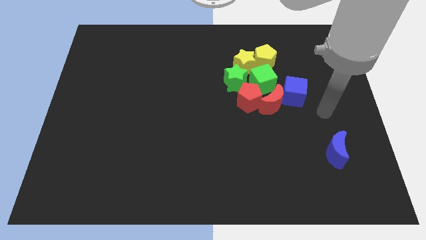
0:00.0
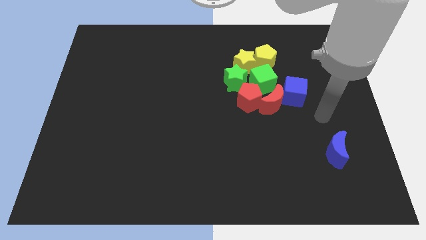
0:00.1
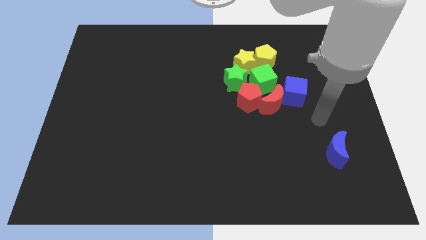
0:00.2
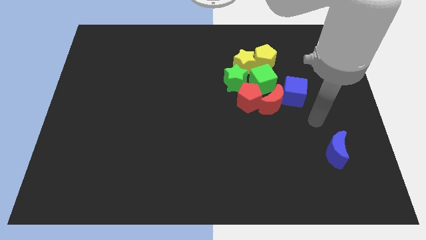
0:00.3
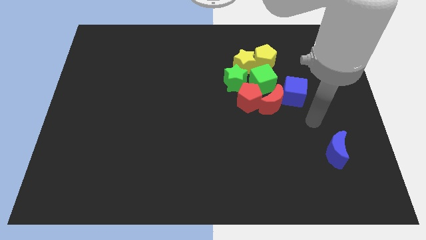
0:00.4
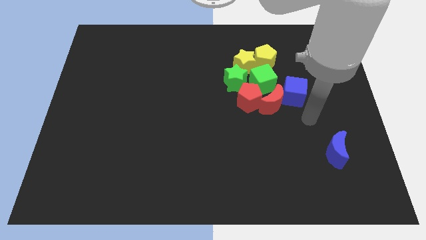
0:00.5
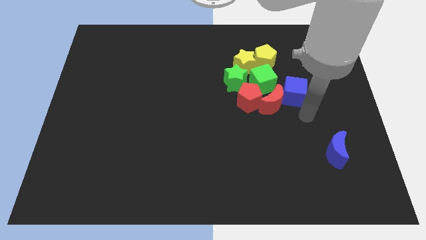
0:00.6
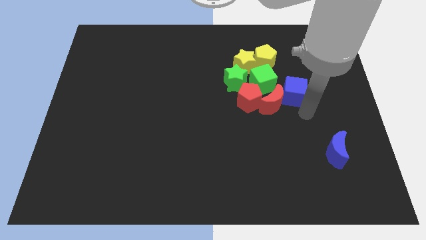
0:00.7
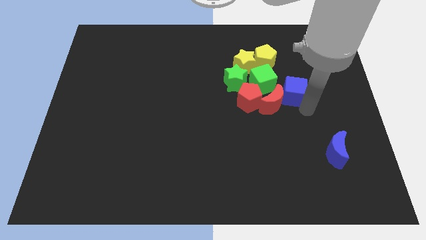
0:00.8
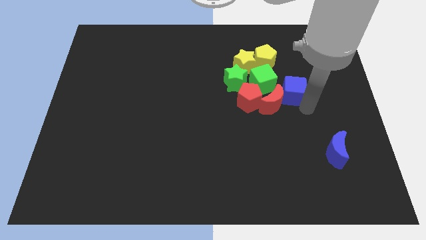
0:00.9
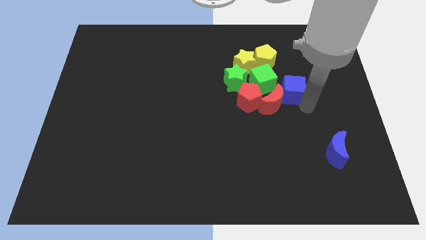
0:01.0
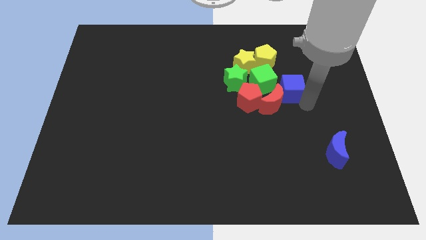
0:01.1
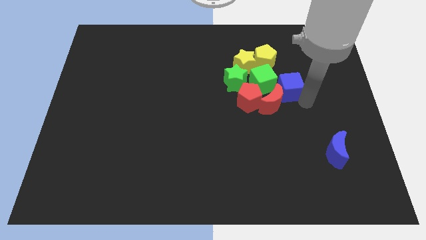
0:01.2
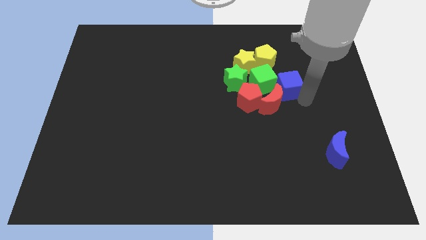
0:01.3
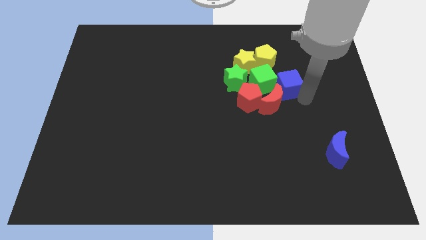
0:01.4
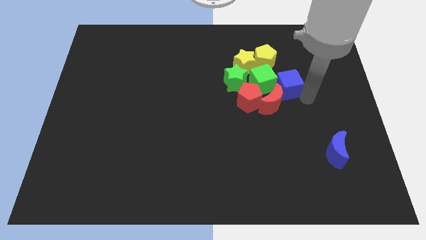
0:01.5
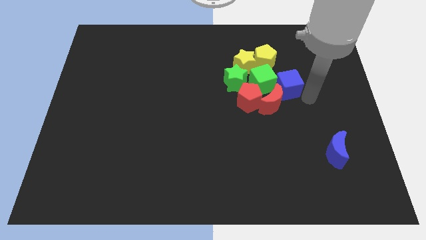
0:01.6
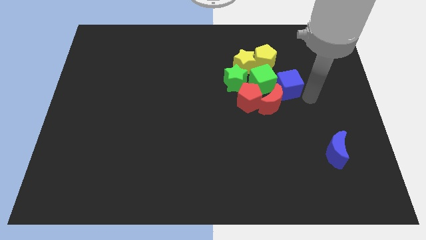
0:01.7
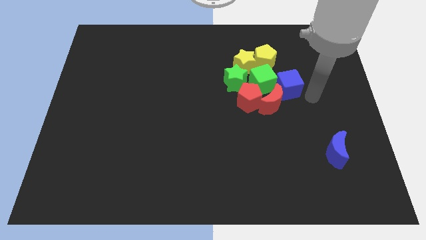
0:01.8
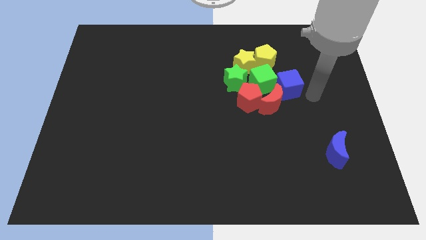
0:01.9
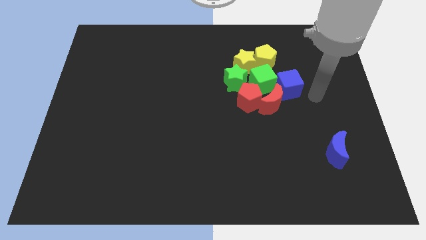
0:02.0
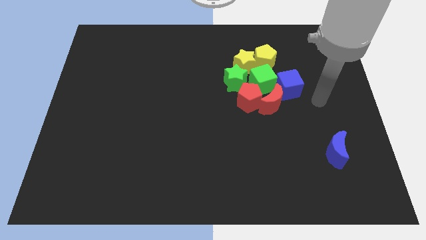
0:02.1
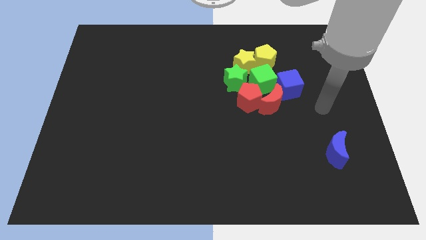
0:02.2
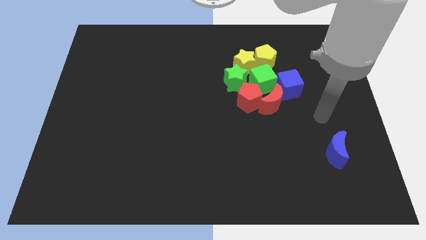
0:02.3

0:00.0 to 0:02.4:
slightly push blue cube to the top right of the red crescent

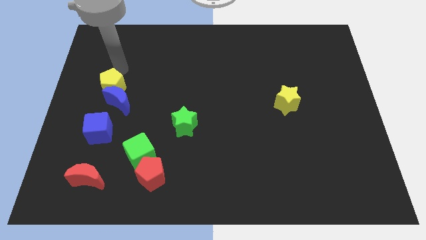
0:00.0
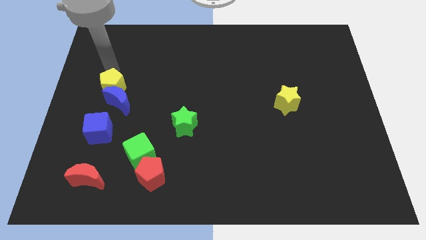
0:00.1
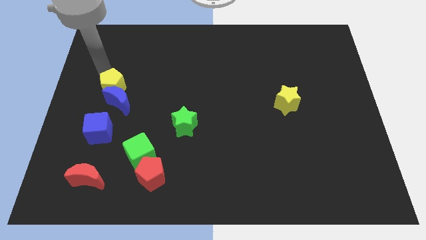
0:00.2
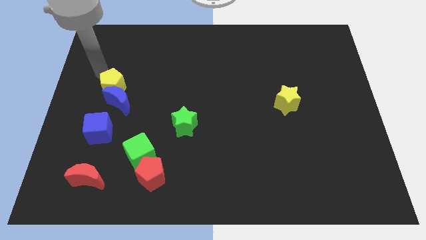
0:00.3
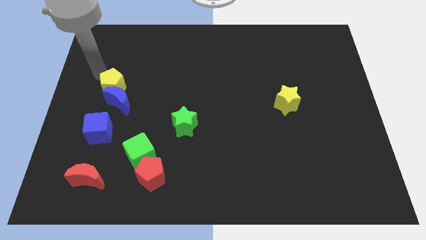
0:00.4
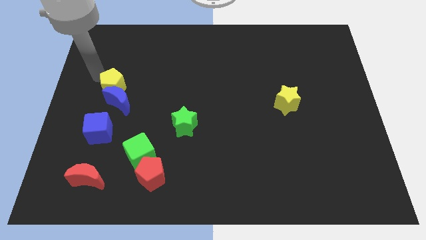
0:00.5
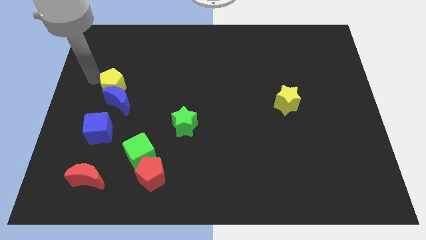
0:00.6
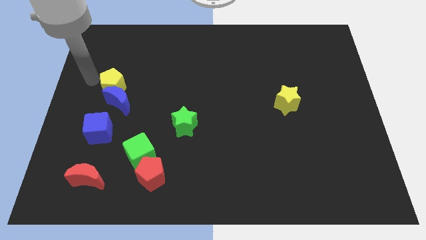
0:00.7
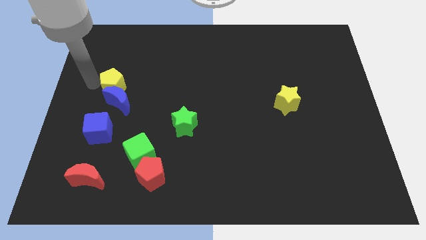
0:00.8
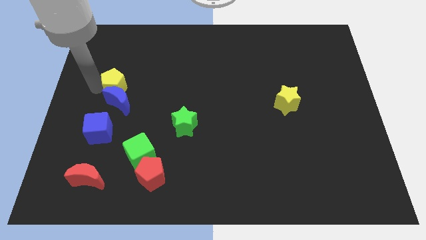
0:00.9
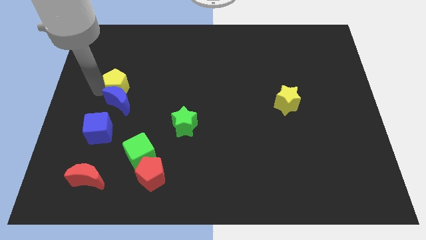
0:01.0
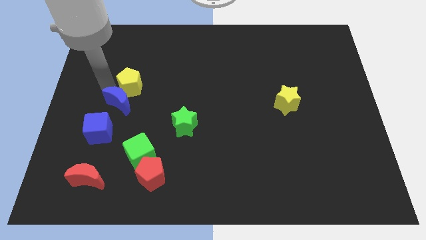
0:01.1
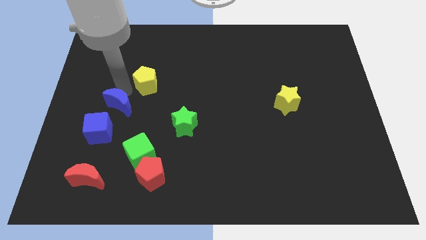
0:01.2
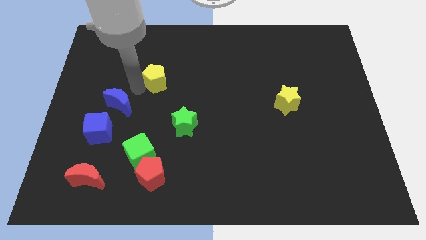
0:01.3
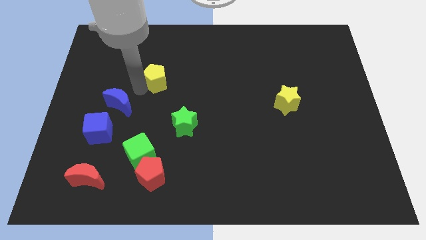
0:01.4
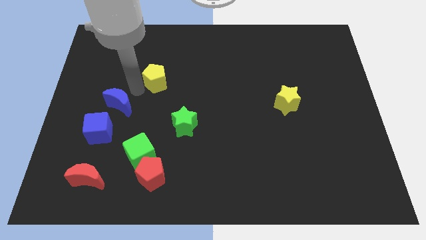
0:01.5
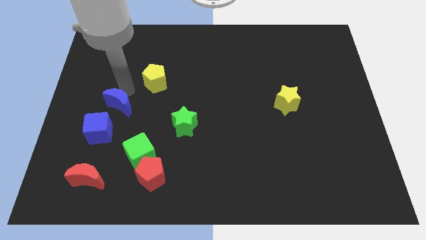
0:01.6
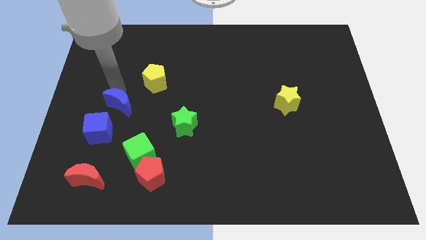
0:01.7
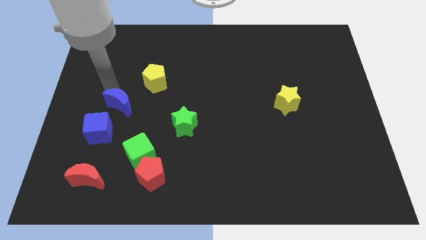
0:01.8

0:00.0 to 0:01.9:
move yellow pentagon slightly right

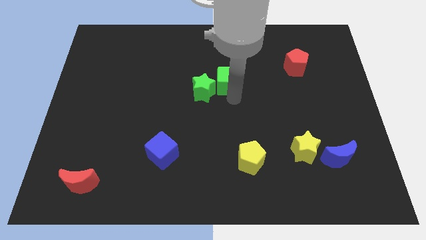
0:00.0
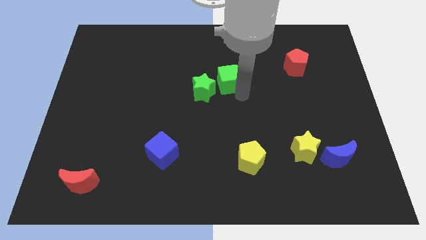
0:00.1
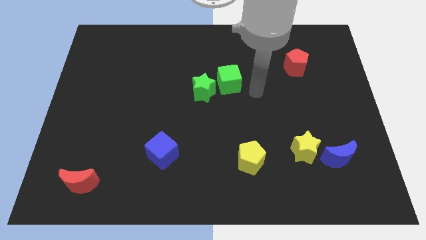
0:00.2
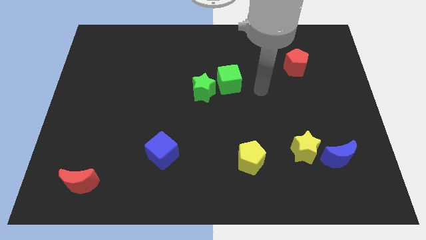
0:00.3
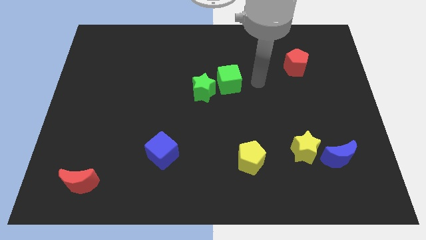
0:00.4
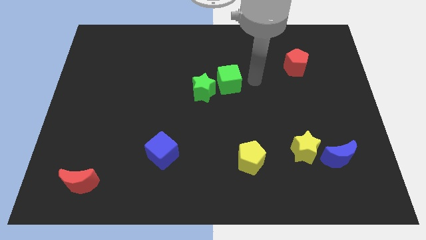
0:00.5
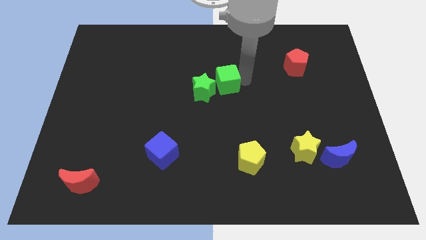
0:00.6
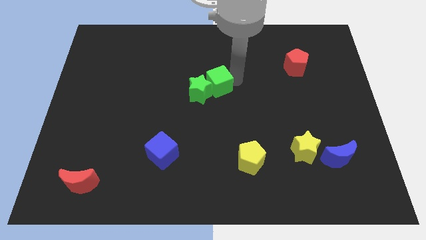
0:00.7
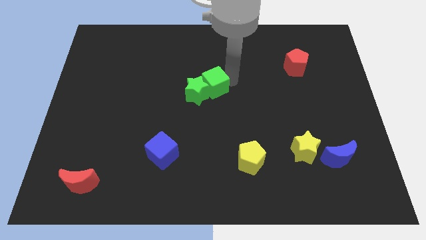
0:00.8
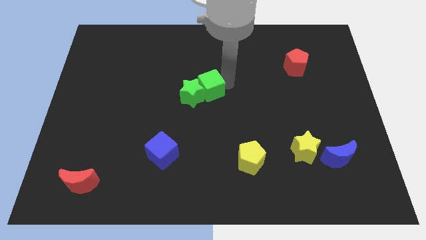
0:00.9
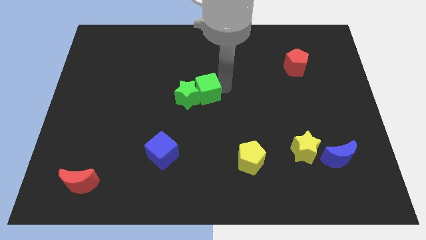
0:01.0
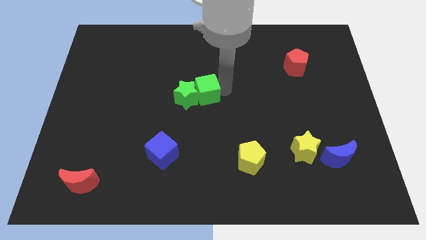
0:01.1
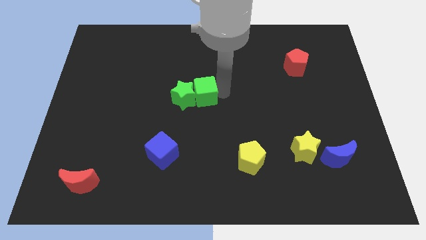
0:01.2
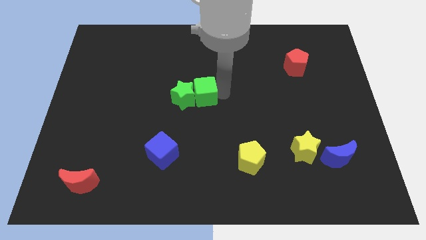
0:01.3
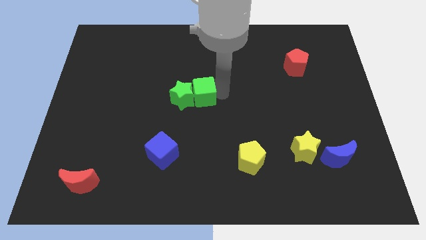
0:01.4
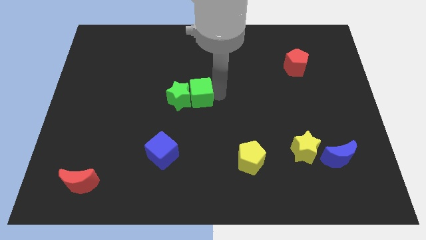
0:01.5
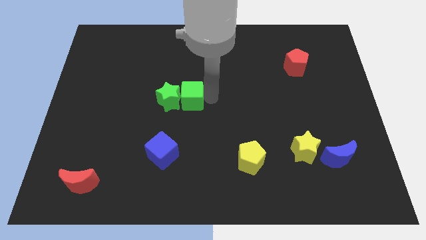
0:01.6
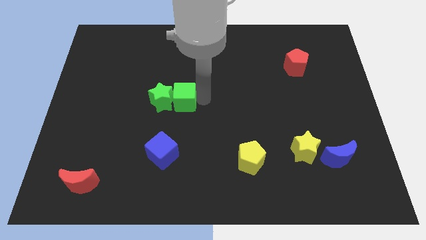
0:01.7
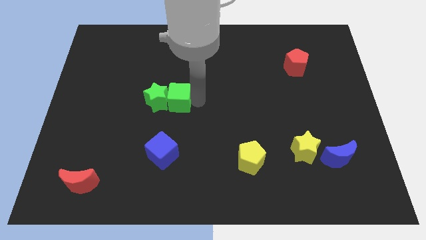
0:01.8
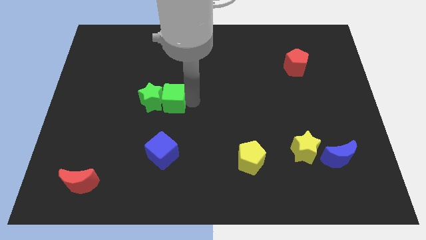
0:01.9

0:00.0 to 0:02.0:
put the green blocks vertically above the blue cube

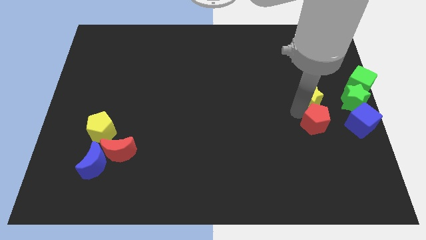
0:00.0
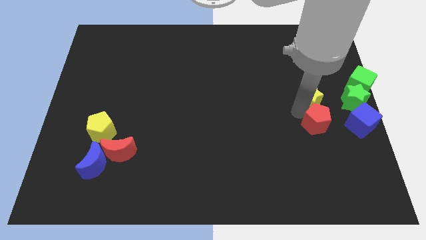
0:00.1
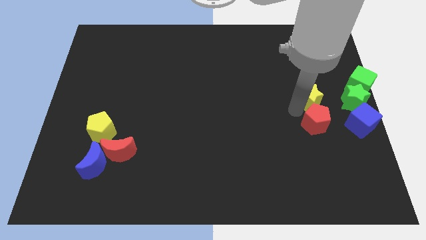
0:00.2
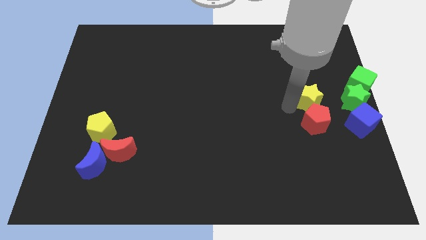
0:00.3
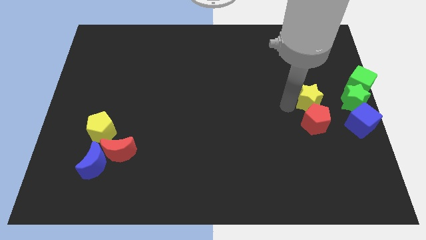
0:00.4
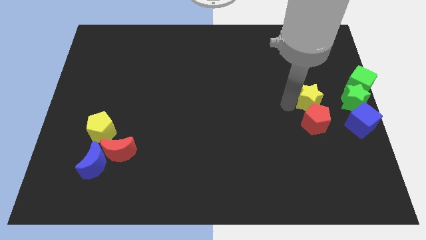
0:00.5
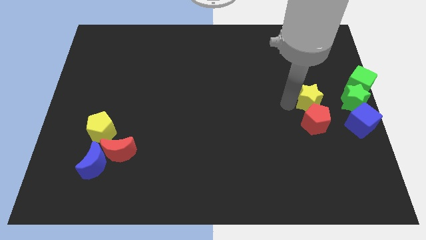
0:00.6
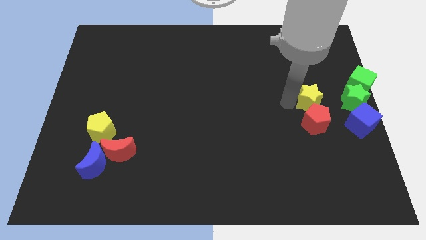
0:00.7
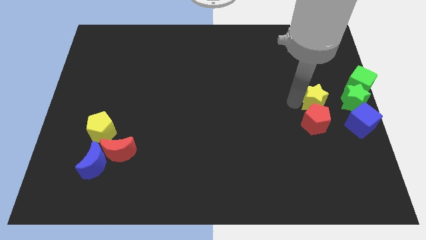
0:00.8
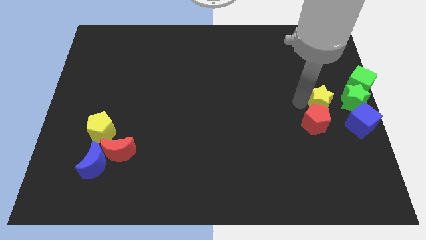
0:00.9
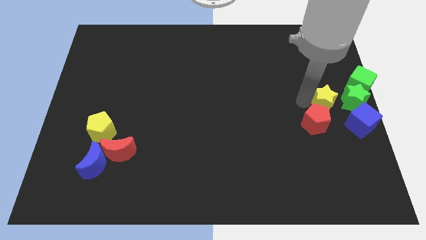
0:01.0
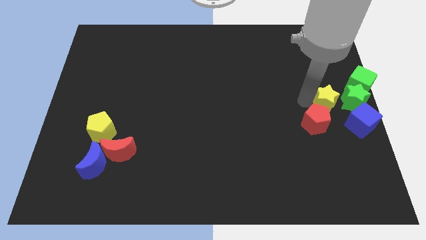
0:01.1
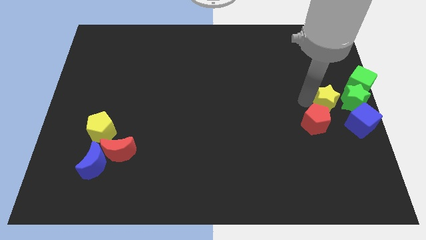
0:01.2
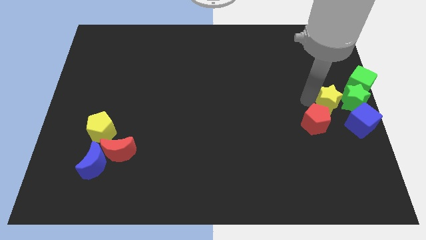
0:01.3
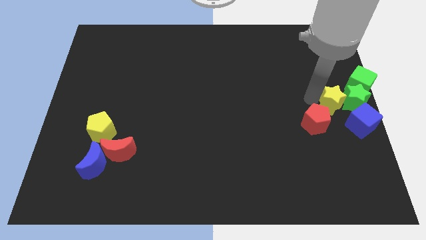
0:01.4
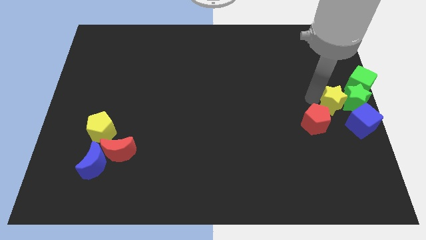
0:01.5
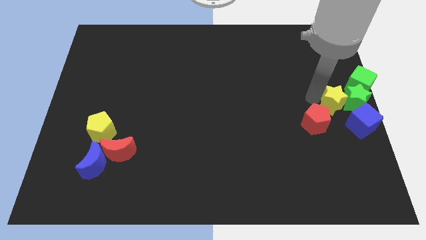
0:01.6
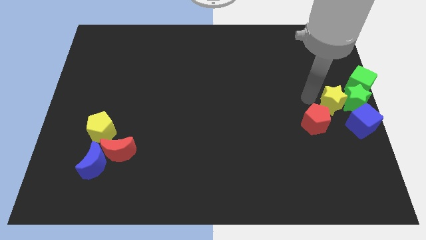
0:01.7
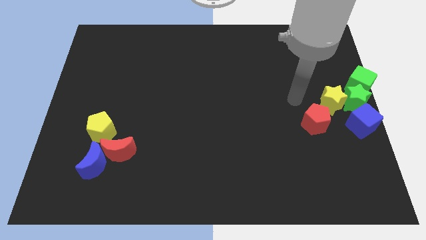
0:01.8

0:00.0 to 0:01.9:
move yellow star into green star

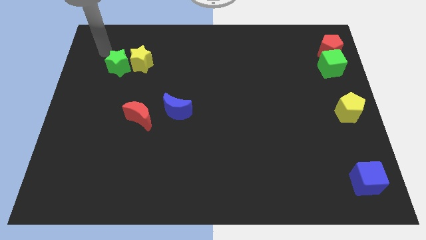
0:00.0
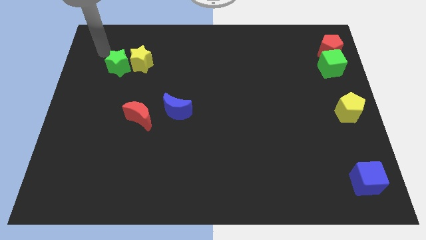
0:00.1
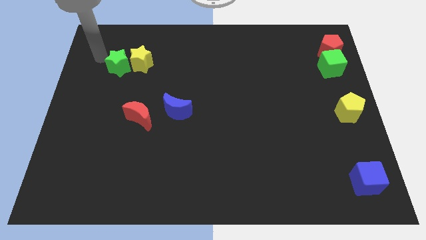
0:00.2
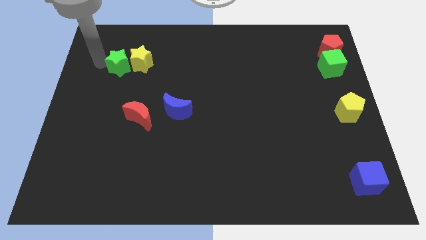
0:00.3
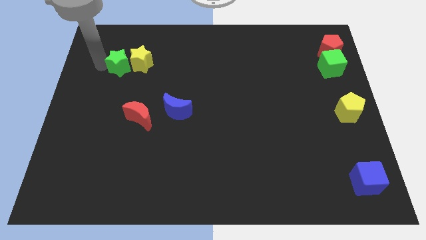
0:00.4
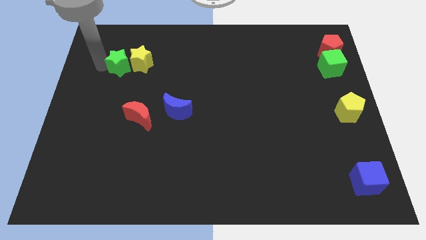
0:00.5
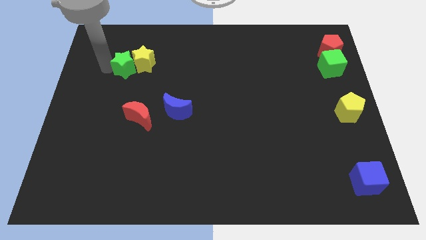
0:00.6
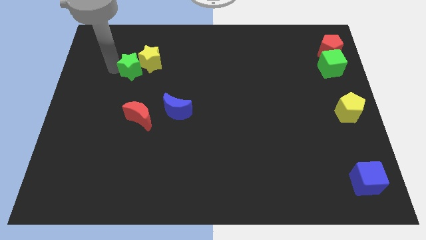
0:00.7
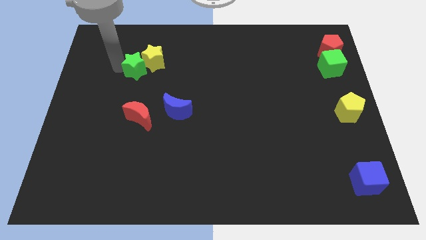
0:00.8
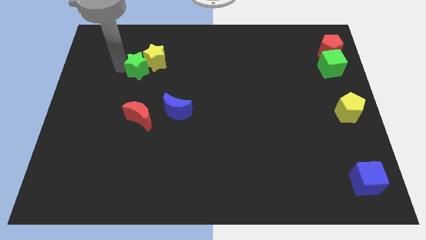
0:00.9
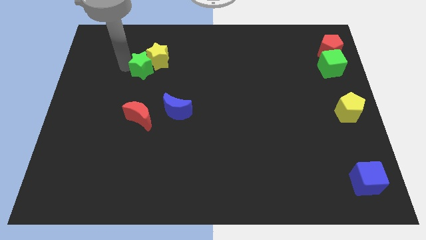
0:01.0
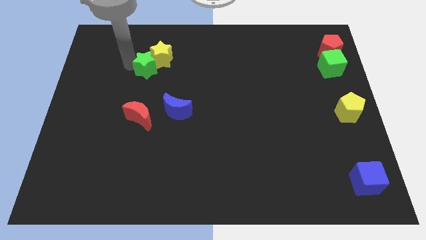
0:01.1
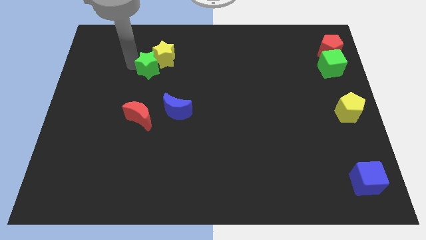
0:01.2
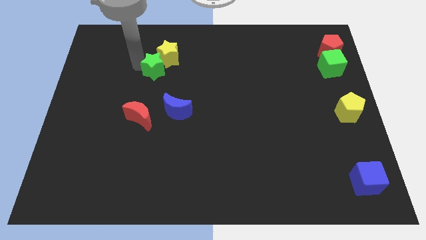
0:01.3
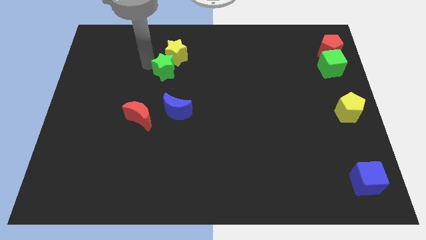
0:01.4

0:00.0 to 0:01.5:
push the green star into the yellow star
